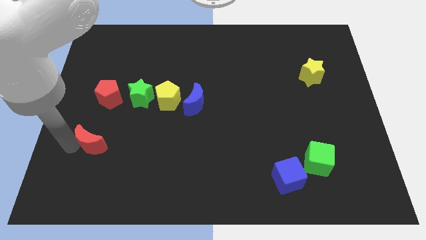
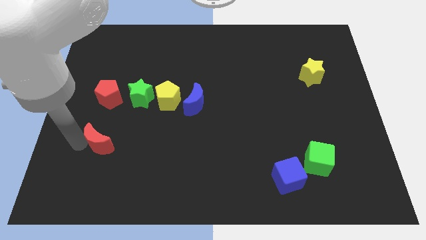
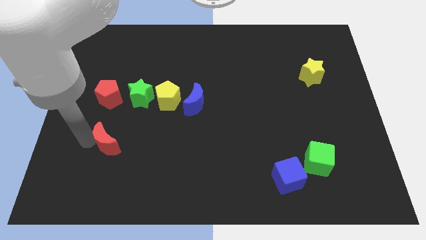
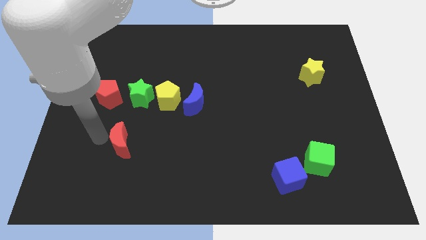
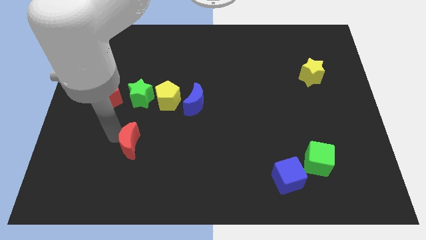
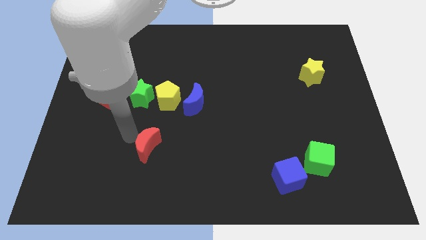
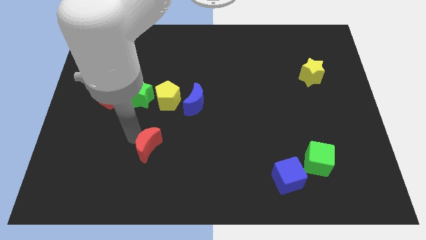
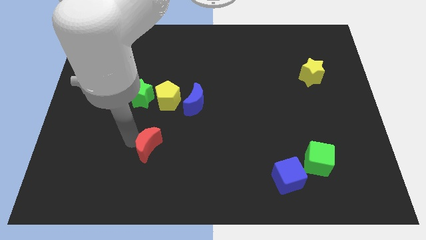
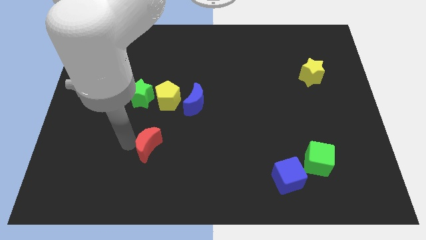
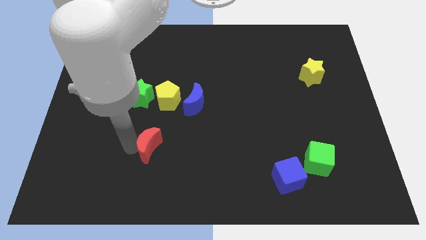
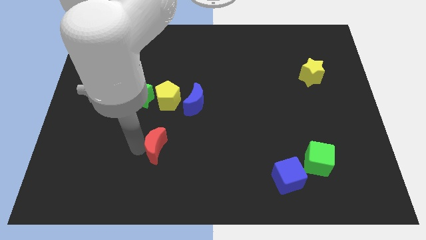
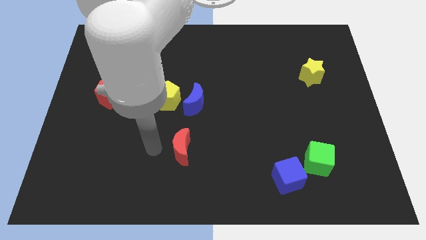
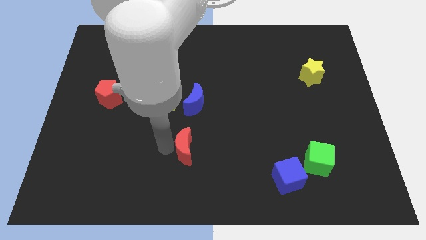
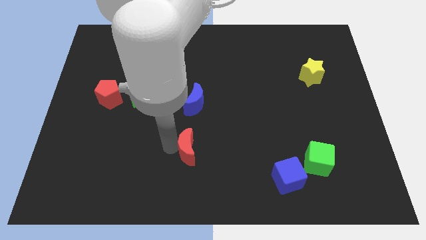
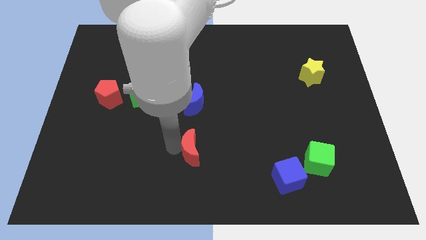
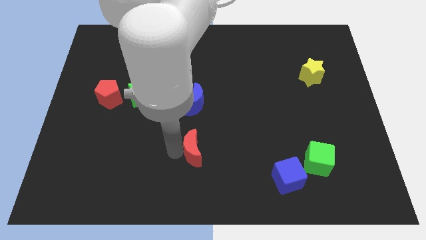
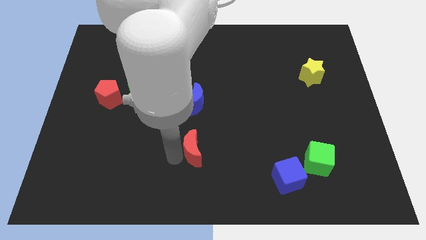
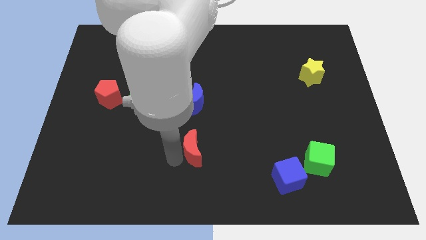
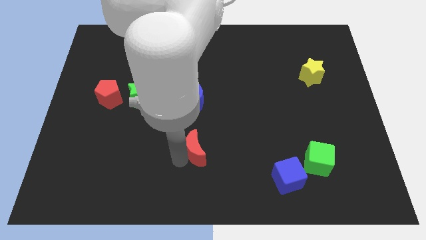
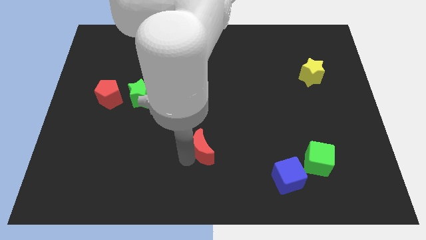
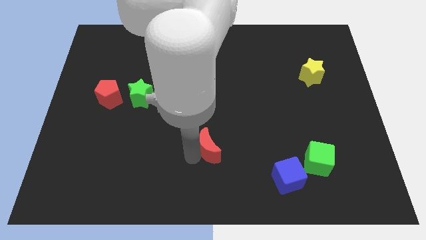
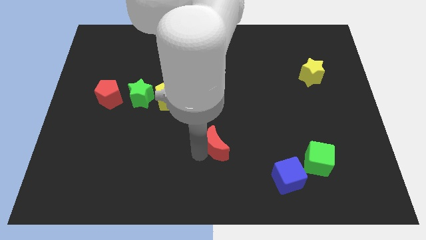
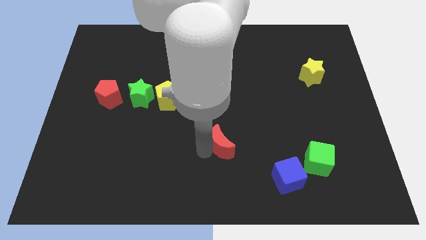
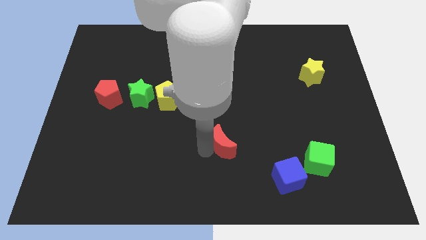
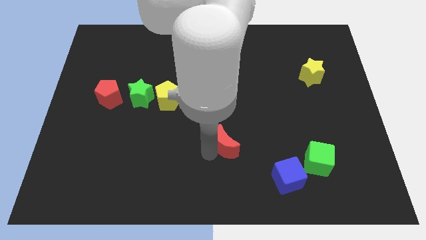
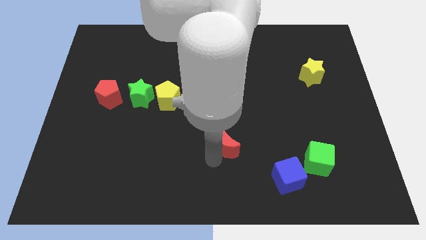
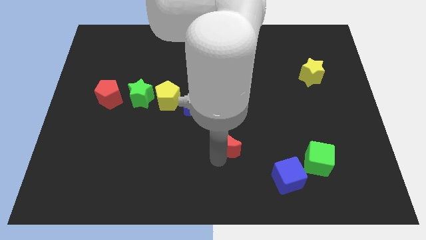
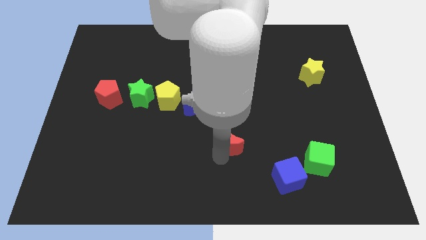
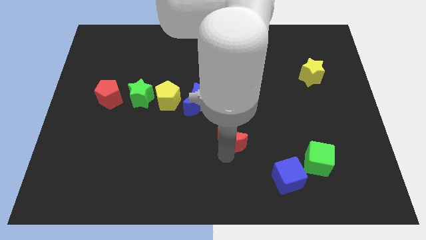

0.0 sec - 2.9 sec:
push the red crescent parallel to the green cube

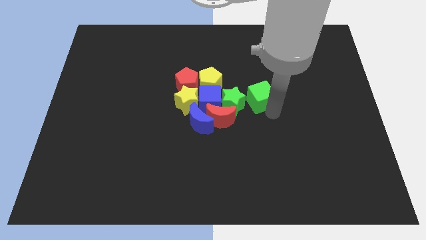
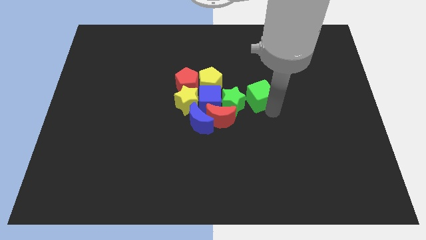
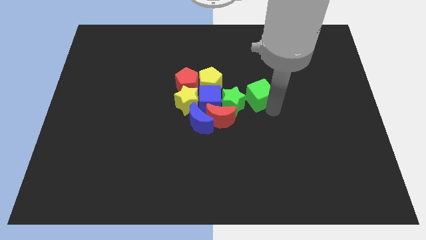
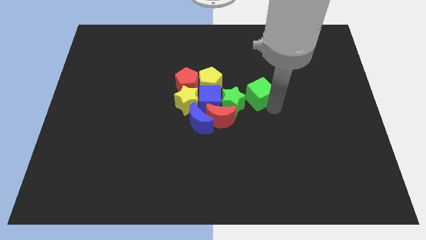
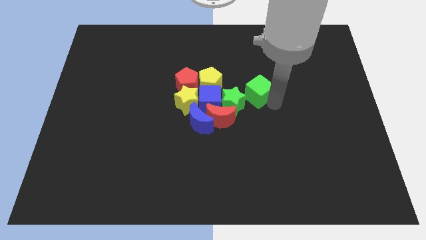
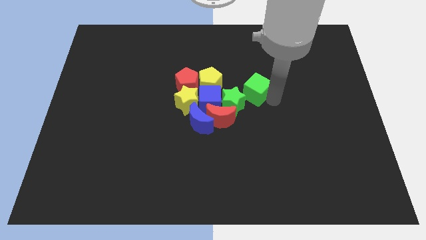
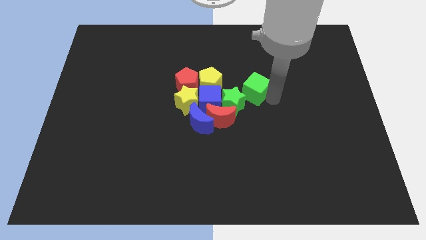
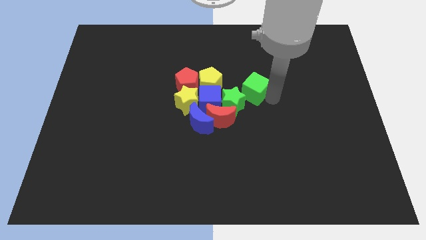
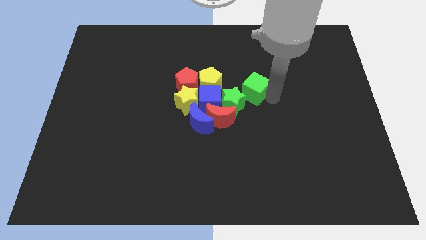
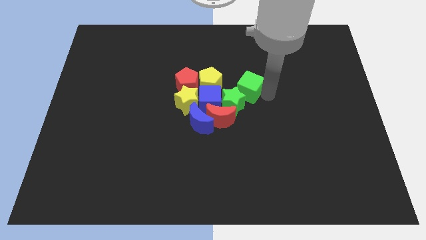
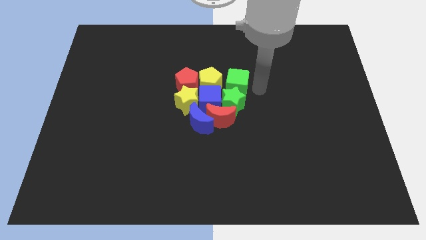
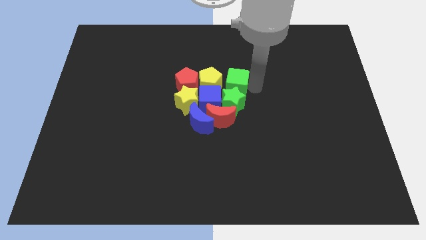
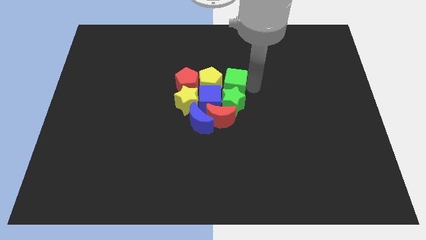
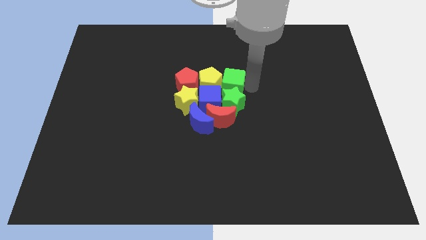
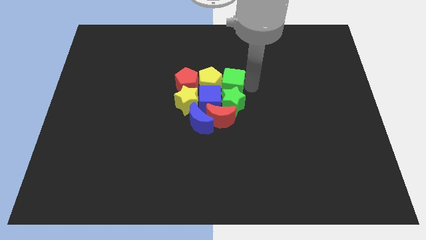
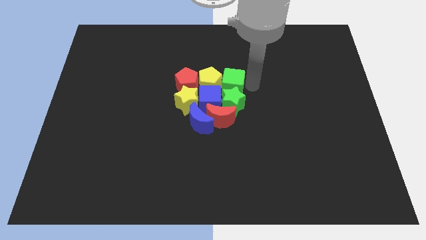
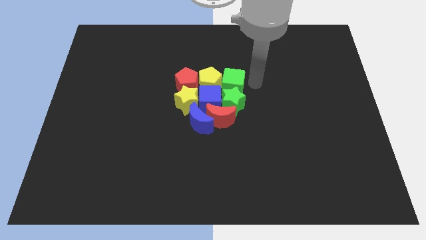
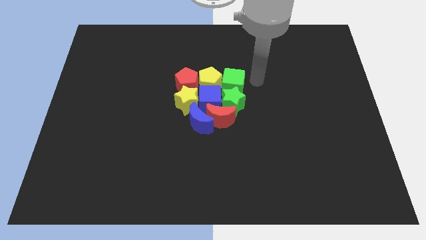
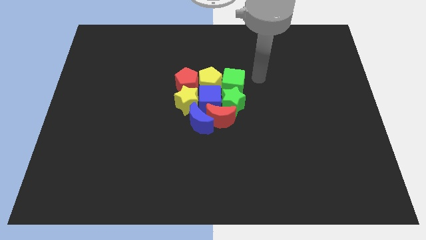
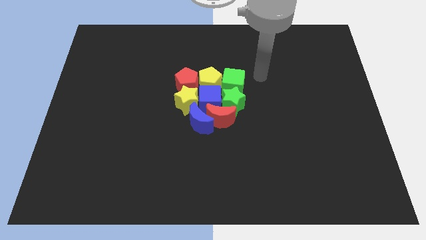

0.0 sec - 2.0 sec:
place the green cube above the green star

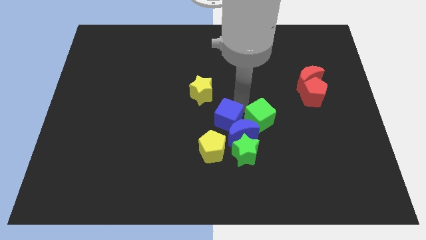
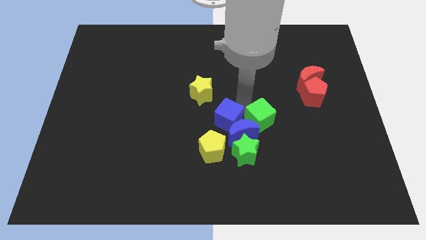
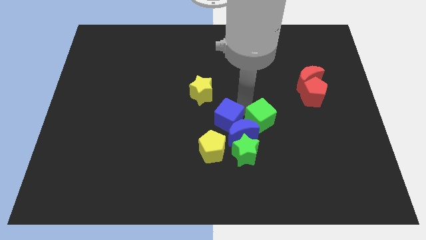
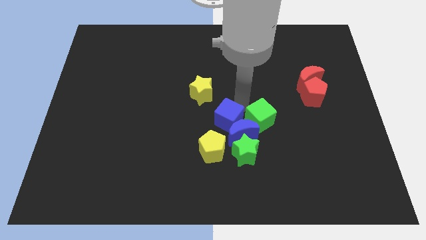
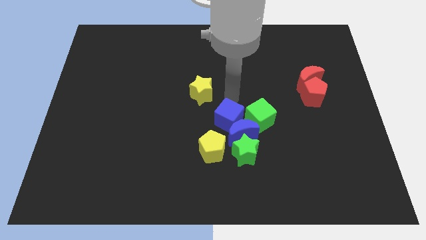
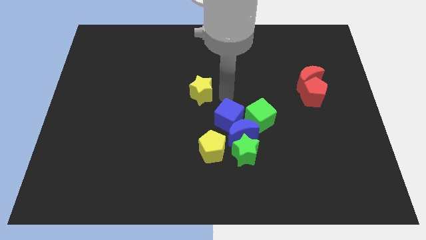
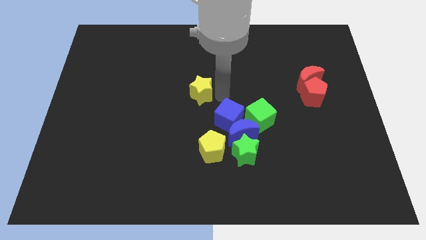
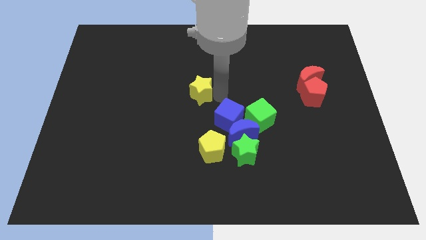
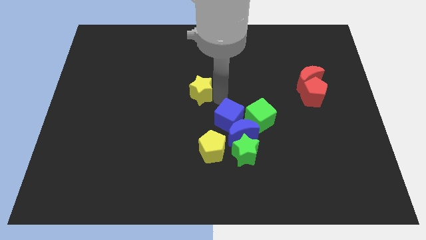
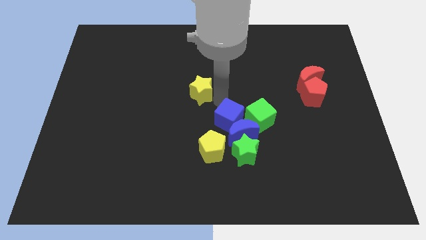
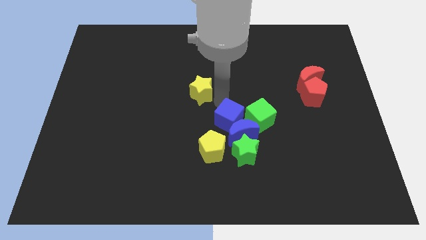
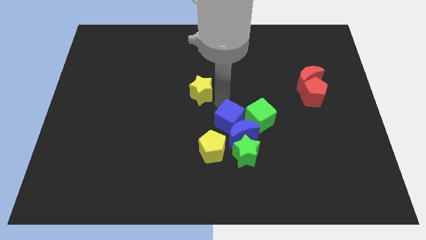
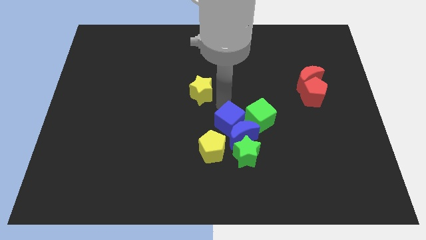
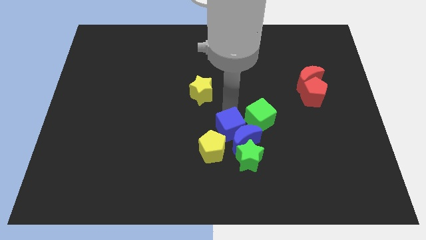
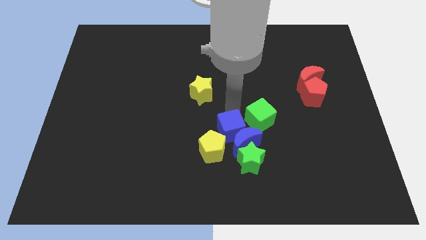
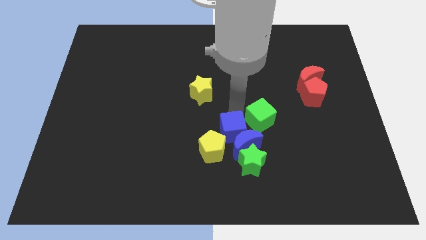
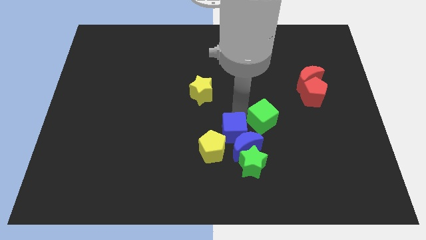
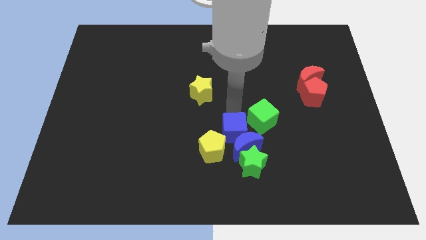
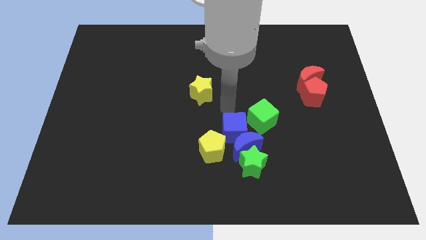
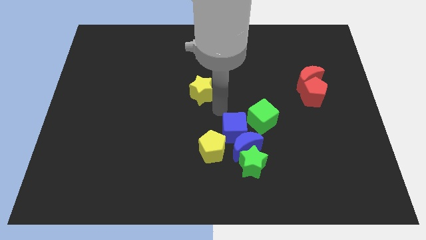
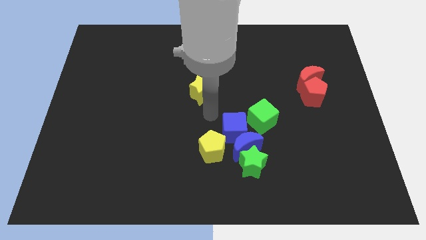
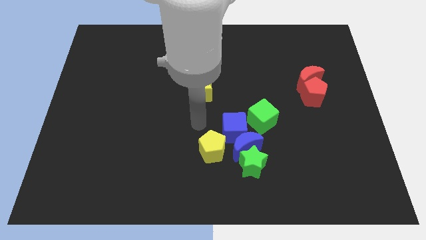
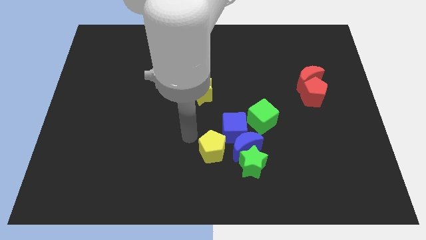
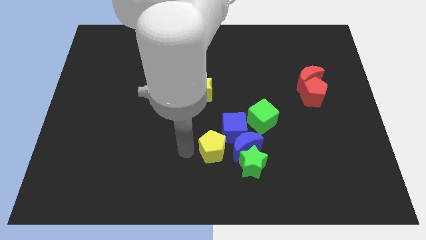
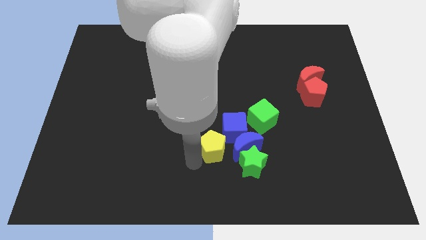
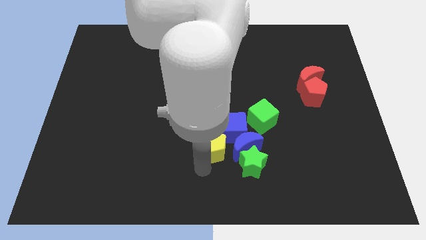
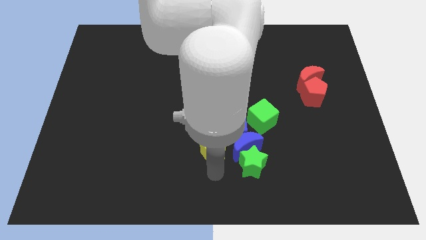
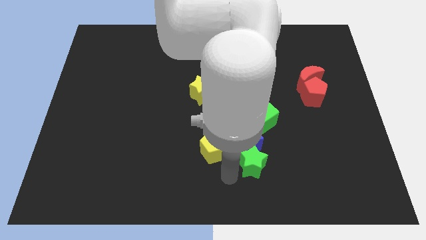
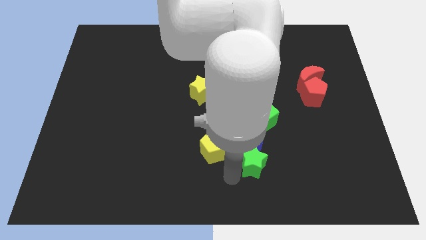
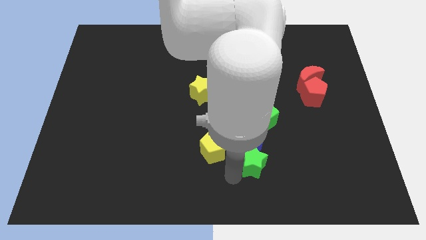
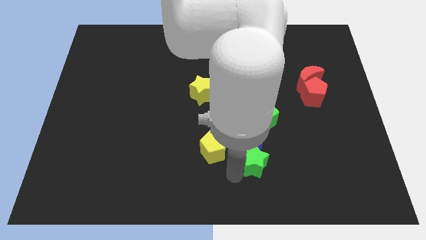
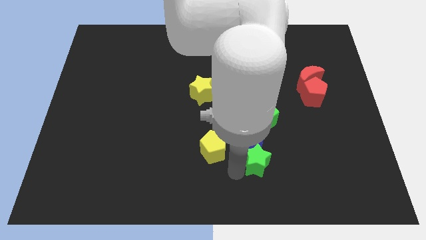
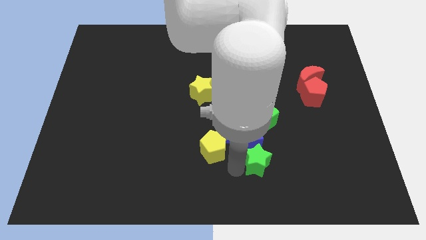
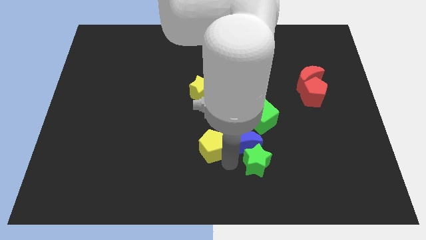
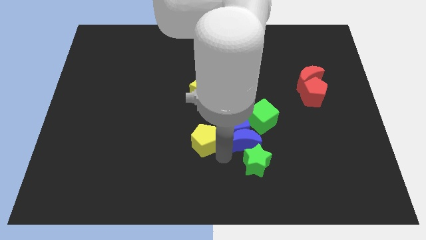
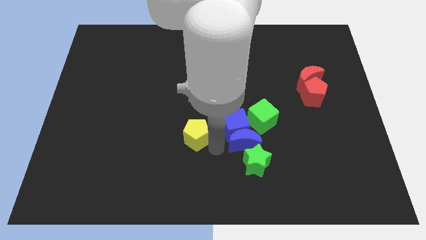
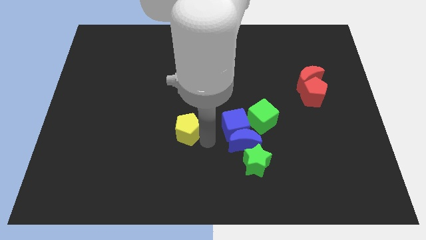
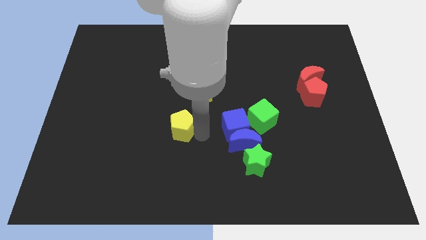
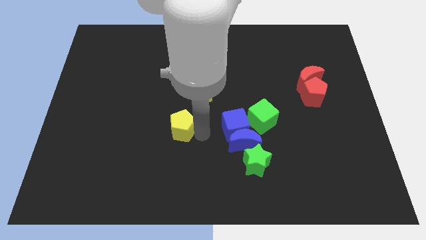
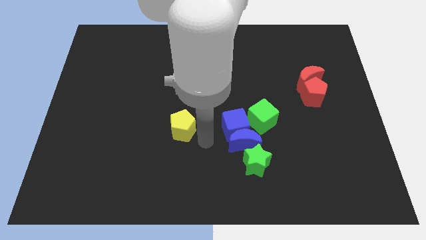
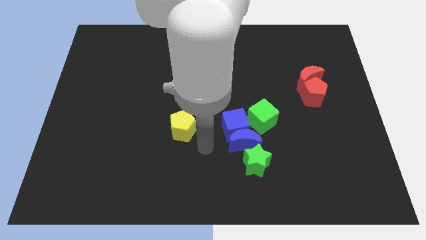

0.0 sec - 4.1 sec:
move the yellow pentagon parallel to the blue cube
